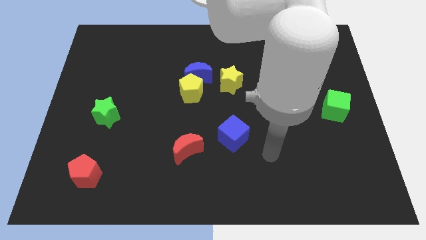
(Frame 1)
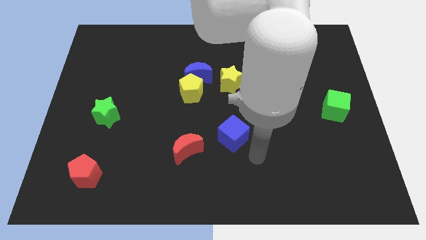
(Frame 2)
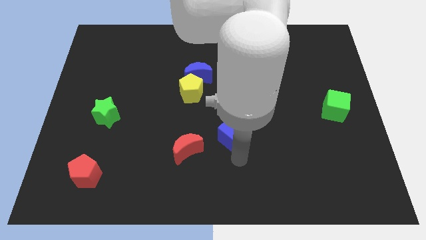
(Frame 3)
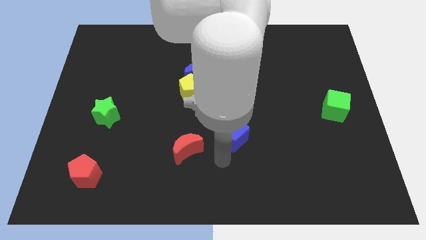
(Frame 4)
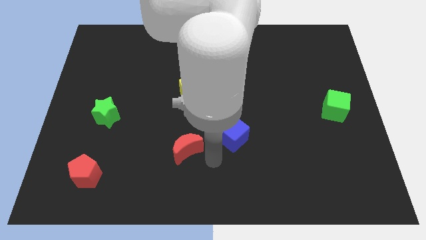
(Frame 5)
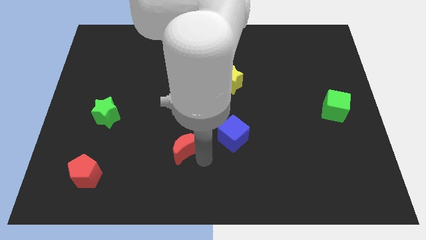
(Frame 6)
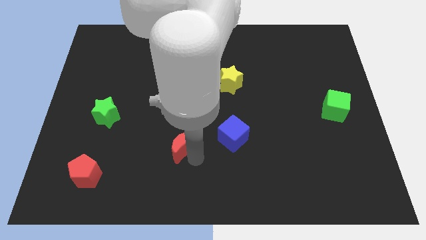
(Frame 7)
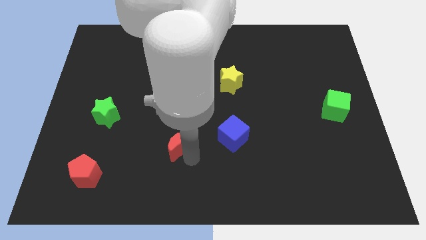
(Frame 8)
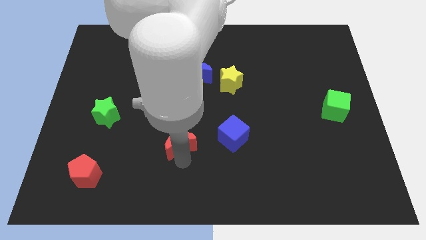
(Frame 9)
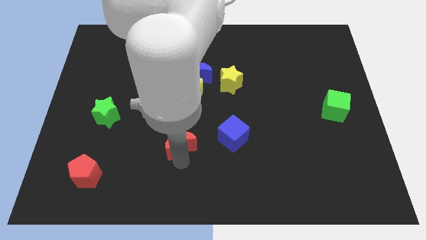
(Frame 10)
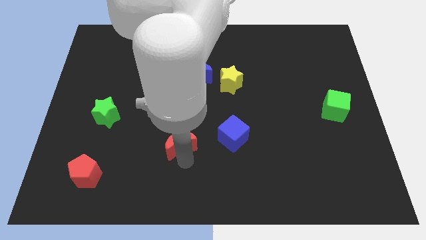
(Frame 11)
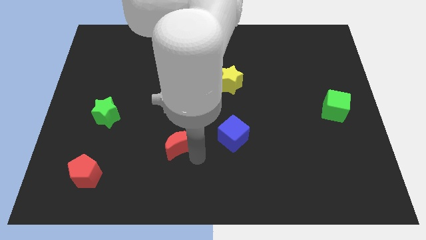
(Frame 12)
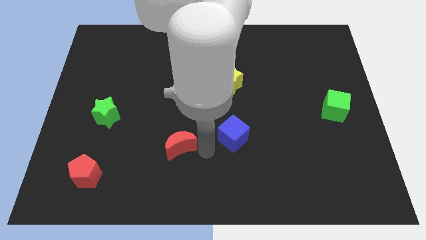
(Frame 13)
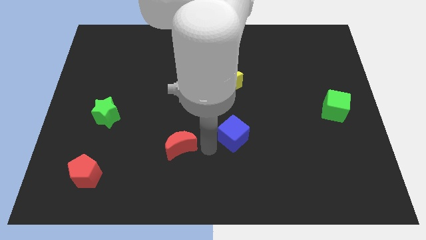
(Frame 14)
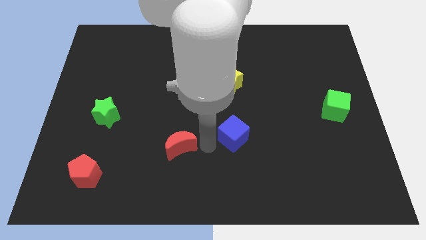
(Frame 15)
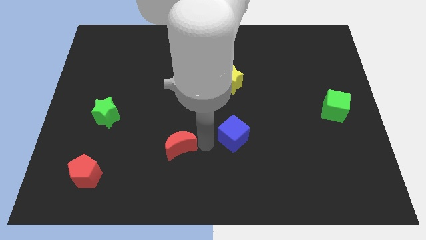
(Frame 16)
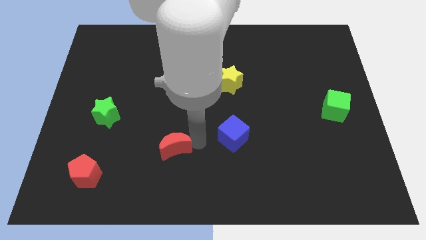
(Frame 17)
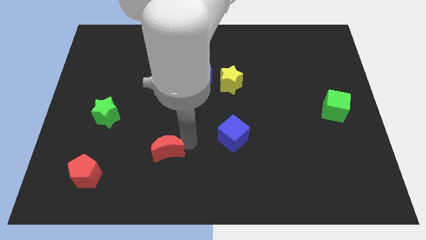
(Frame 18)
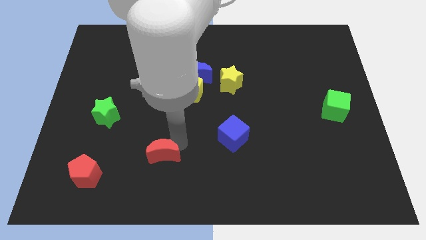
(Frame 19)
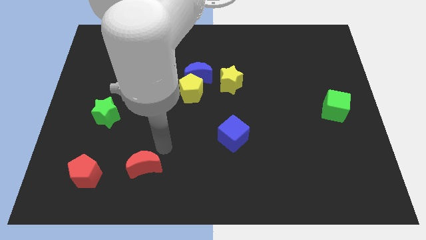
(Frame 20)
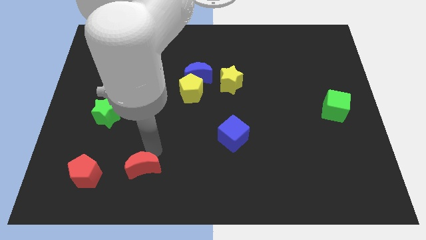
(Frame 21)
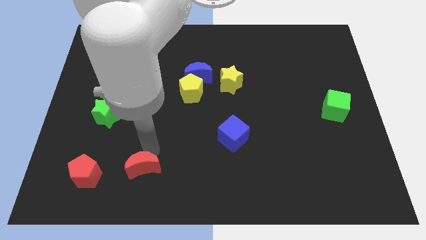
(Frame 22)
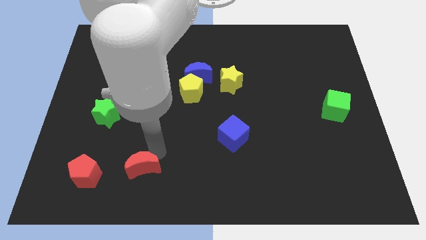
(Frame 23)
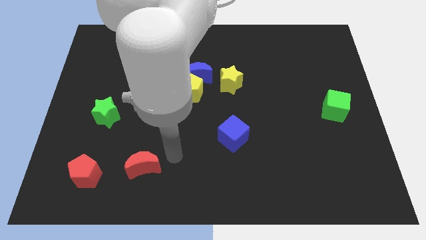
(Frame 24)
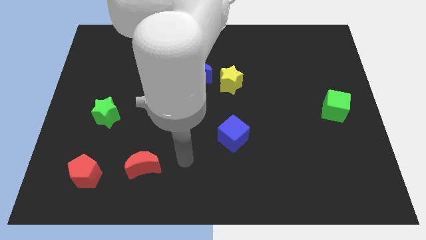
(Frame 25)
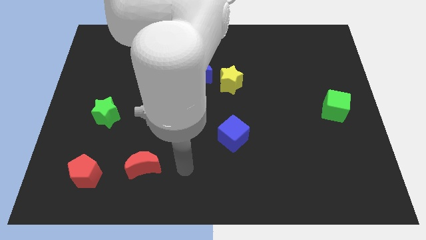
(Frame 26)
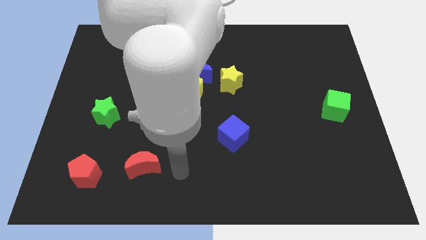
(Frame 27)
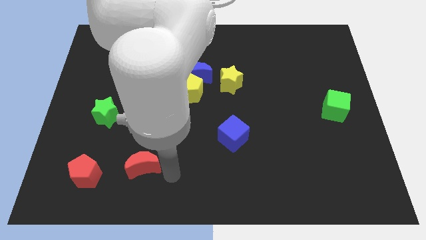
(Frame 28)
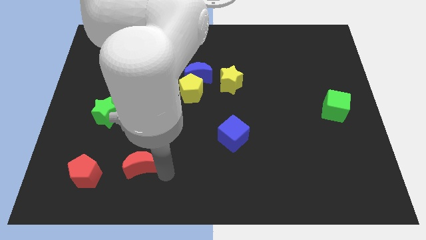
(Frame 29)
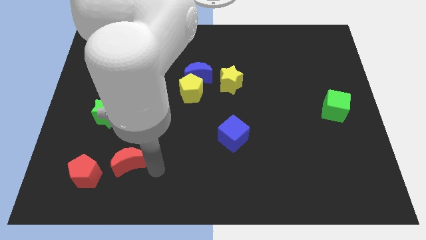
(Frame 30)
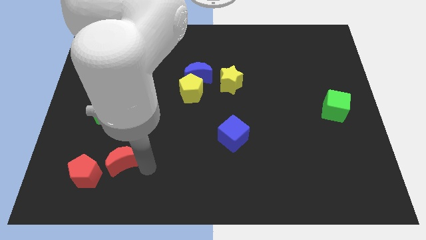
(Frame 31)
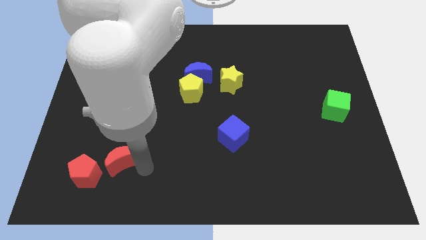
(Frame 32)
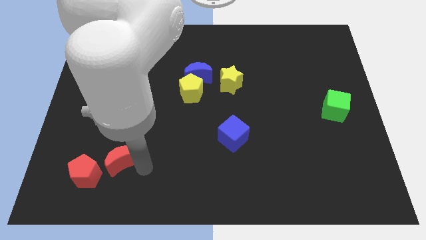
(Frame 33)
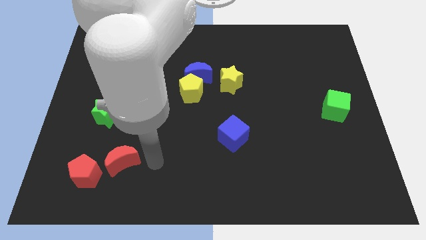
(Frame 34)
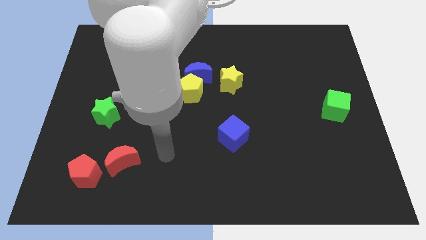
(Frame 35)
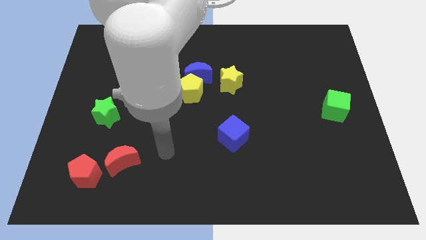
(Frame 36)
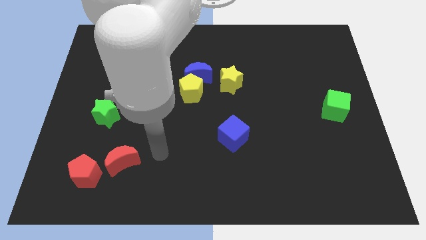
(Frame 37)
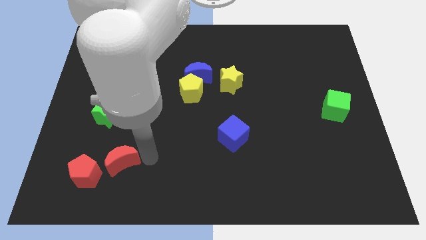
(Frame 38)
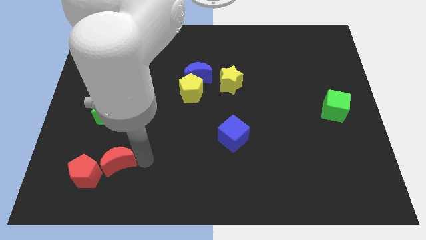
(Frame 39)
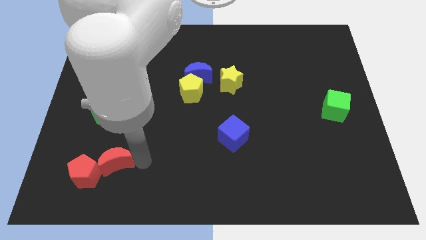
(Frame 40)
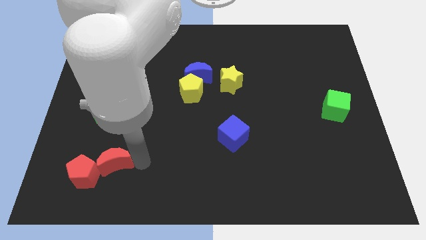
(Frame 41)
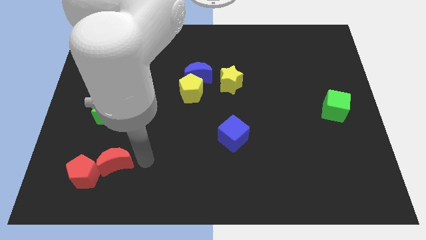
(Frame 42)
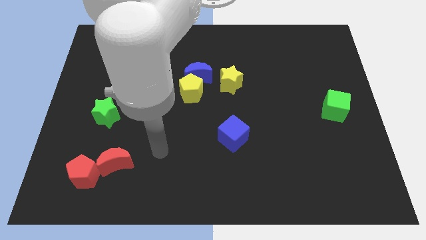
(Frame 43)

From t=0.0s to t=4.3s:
push the red moon into the red pentagon

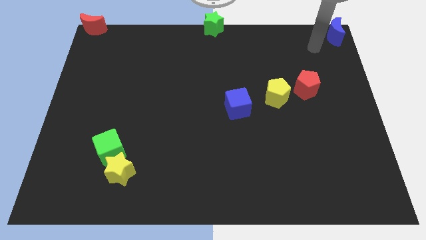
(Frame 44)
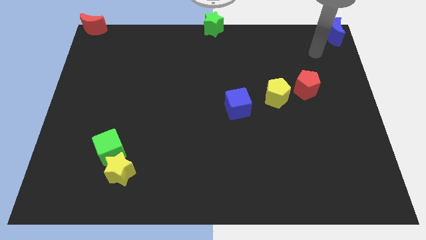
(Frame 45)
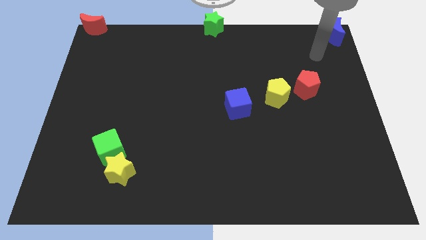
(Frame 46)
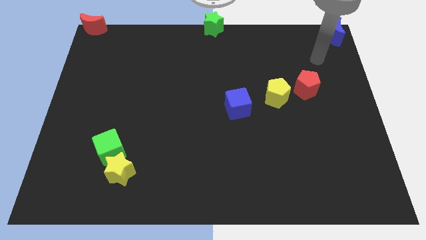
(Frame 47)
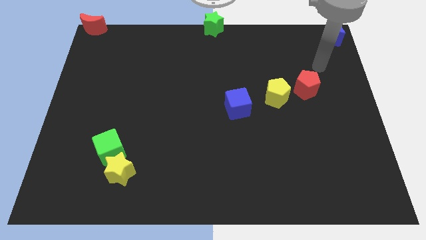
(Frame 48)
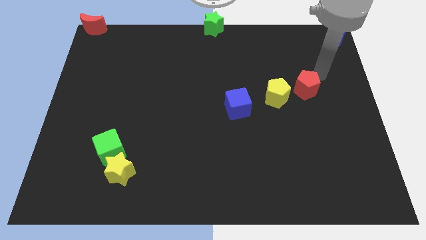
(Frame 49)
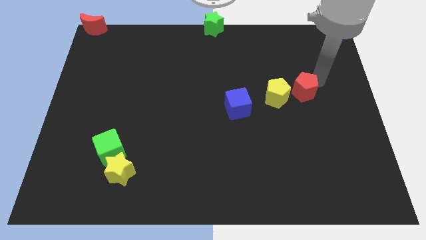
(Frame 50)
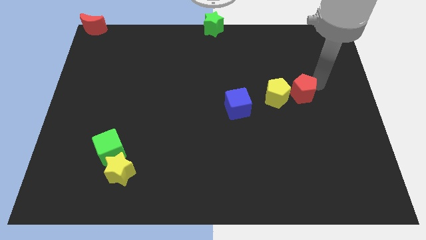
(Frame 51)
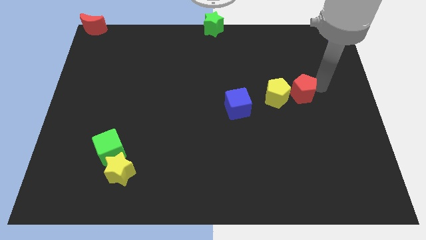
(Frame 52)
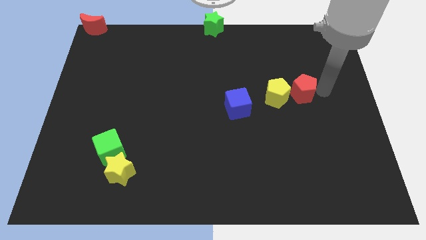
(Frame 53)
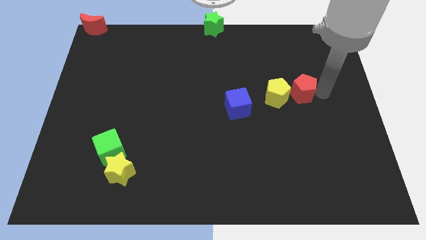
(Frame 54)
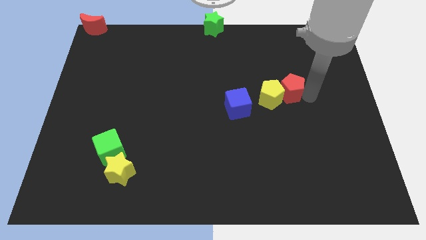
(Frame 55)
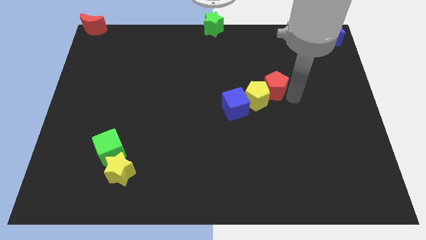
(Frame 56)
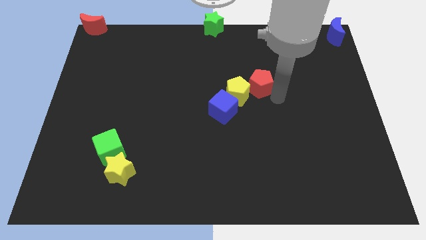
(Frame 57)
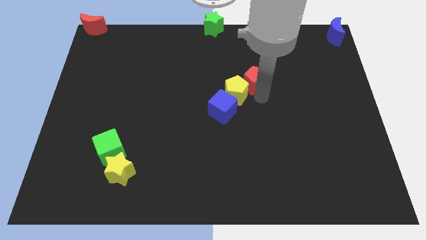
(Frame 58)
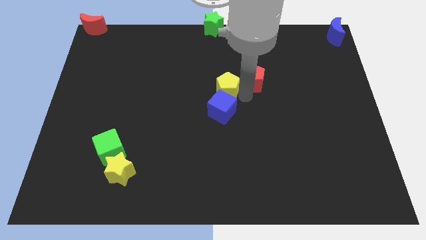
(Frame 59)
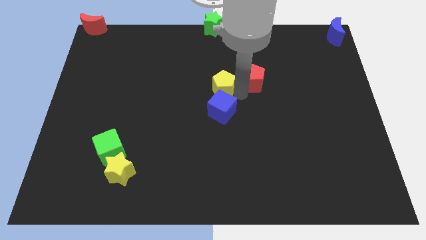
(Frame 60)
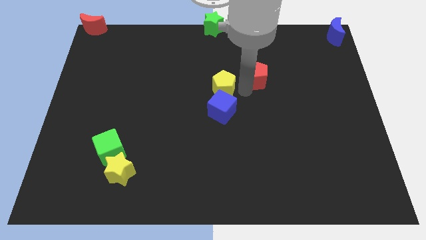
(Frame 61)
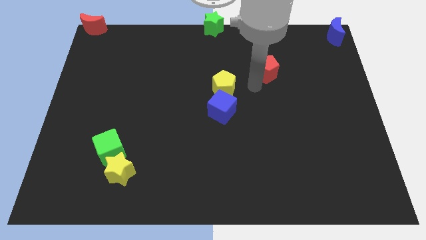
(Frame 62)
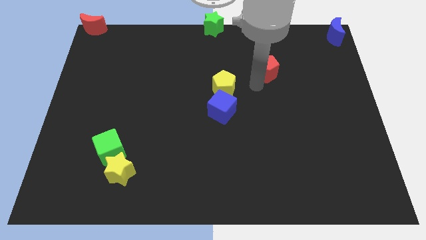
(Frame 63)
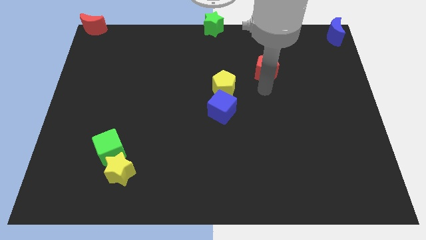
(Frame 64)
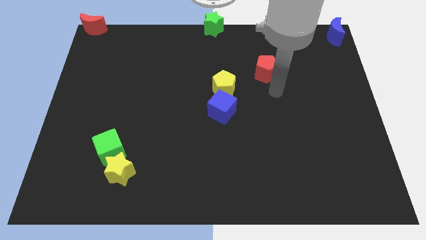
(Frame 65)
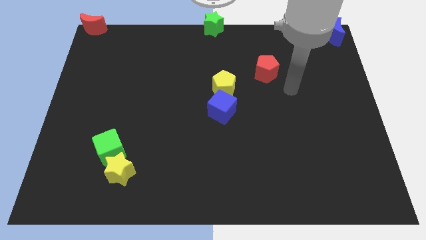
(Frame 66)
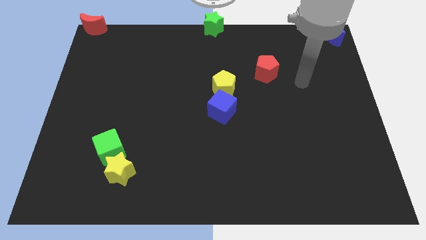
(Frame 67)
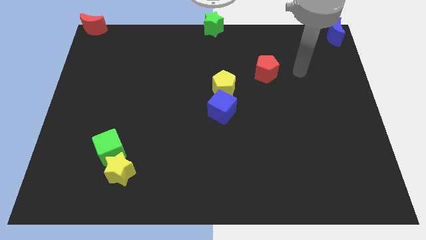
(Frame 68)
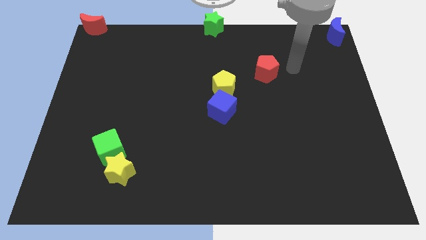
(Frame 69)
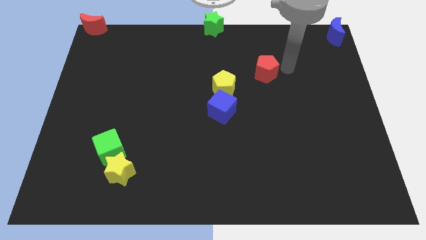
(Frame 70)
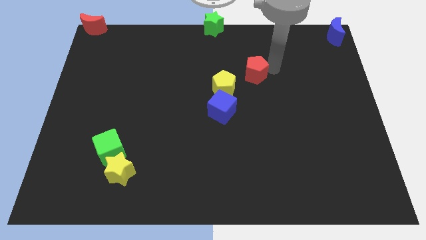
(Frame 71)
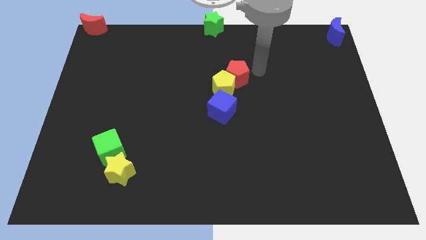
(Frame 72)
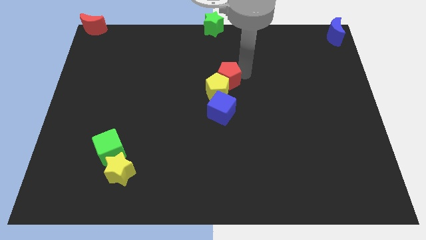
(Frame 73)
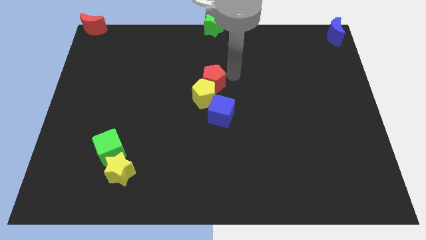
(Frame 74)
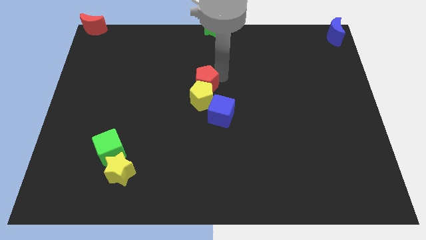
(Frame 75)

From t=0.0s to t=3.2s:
push red pentagon above yellow pentagon

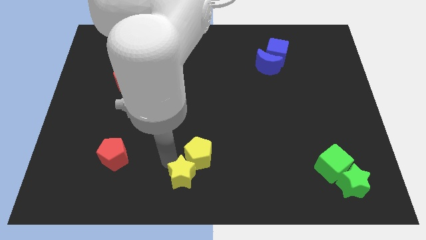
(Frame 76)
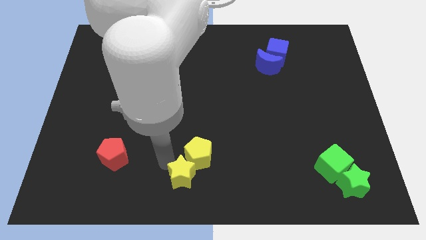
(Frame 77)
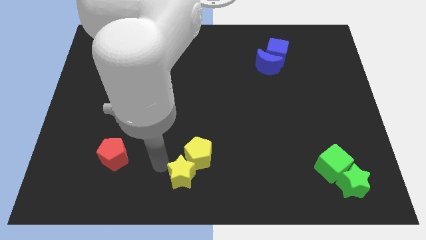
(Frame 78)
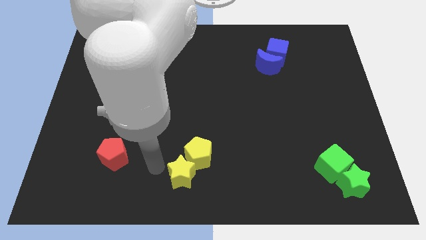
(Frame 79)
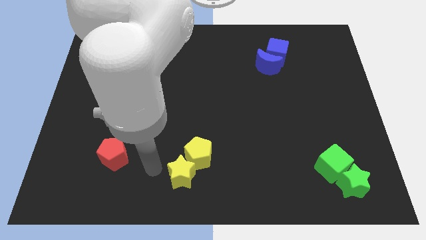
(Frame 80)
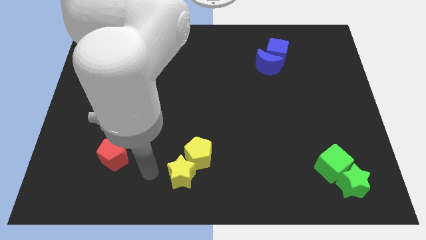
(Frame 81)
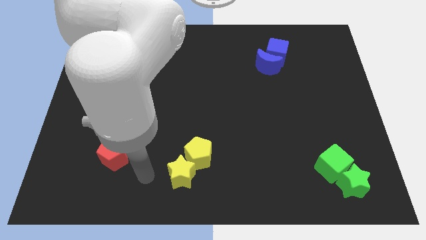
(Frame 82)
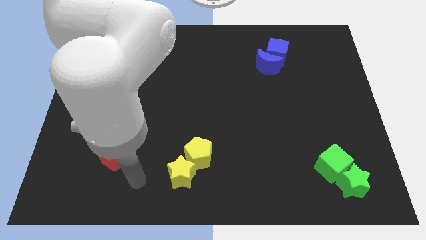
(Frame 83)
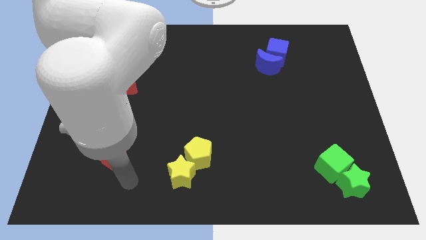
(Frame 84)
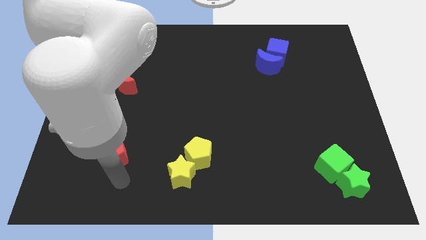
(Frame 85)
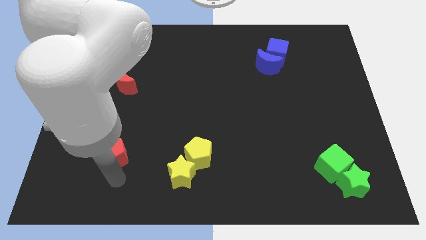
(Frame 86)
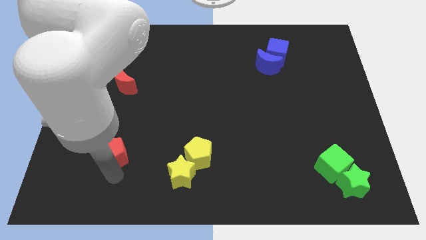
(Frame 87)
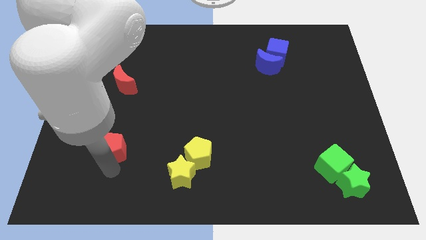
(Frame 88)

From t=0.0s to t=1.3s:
place the arm below the red pentagon

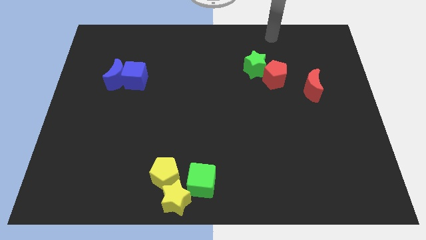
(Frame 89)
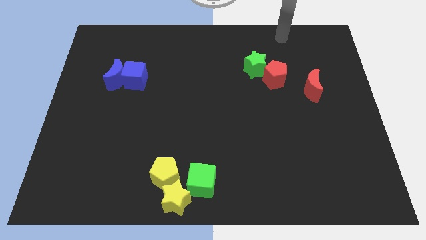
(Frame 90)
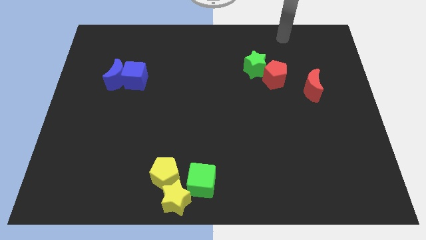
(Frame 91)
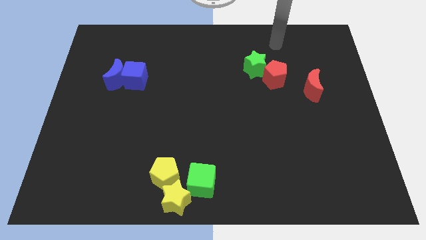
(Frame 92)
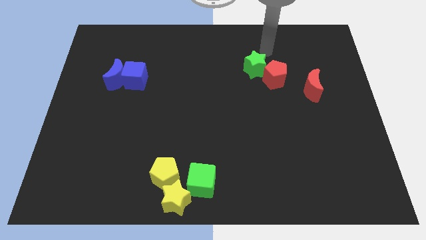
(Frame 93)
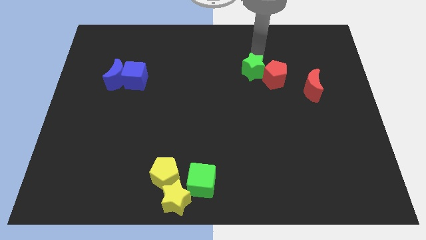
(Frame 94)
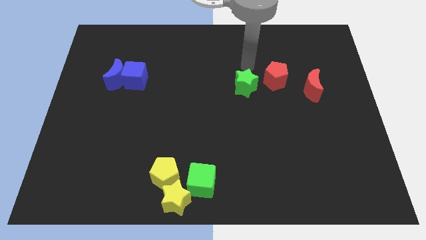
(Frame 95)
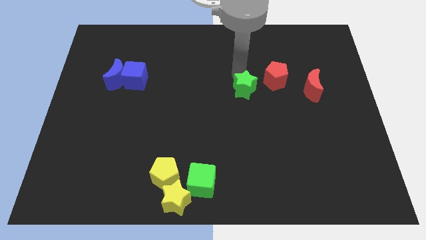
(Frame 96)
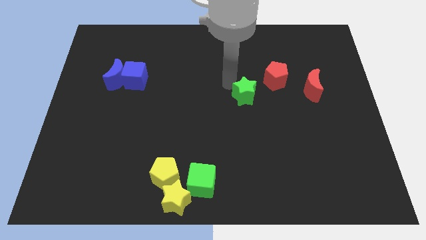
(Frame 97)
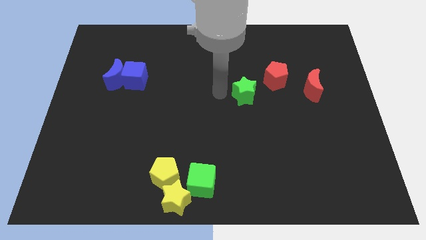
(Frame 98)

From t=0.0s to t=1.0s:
push green star towards center
